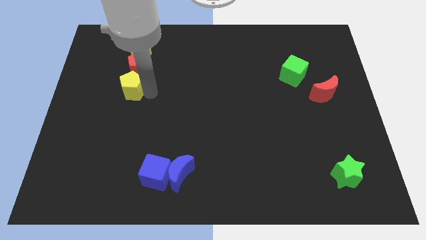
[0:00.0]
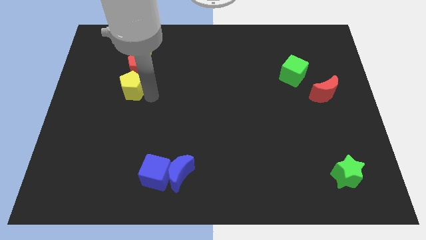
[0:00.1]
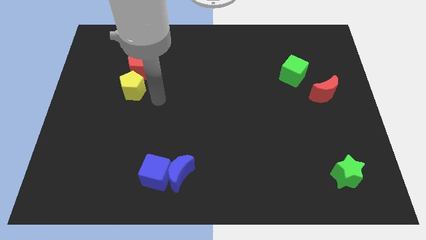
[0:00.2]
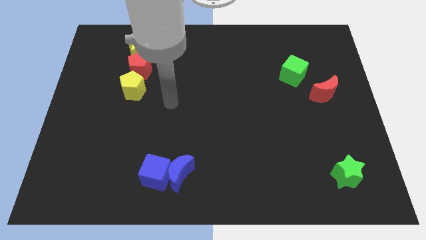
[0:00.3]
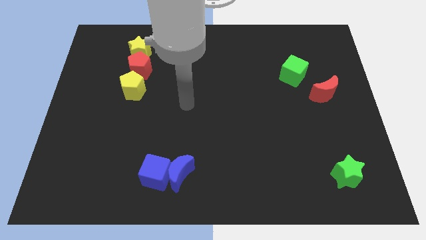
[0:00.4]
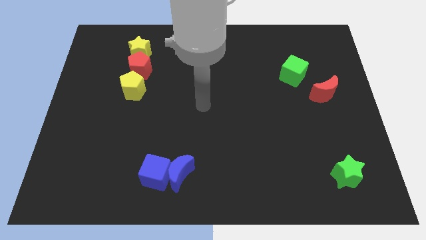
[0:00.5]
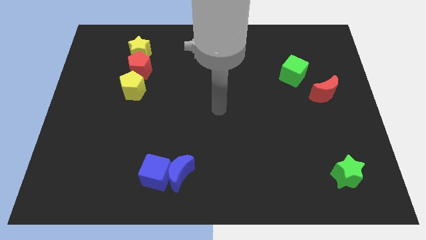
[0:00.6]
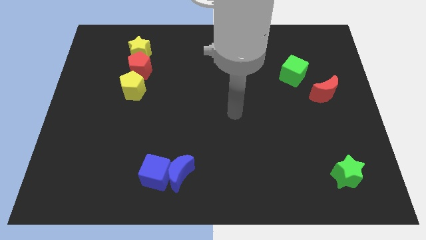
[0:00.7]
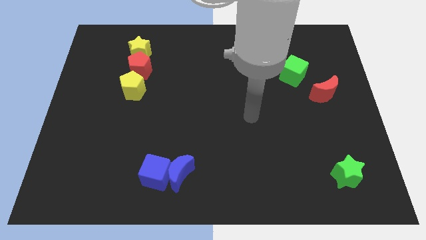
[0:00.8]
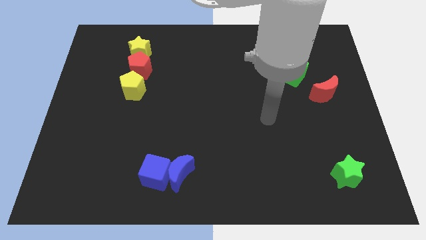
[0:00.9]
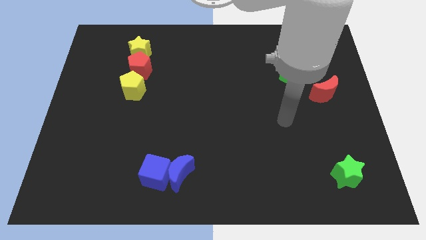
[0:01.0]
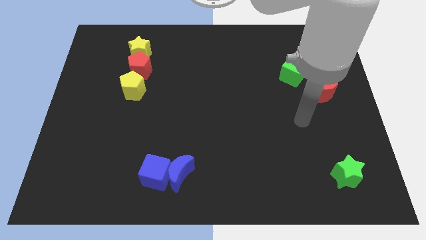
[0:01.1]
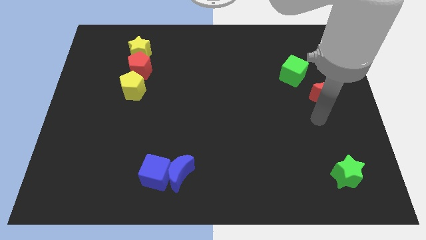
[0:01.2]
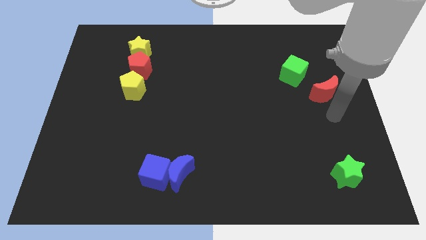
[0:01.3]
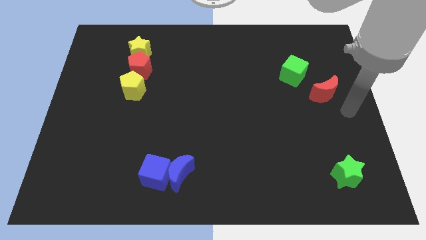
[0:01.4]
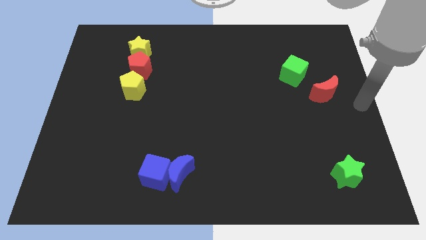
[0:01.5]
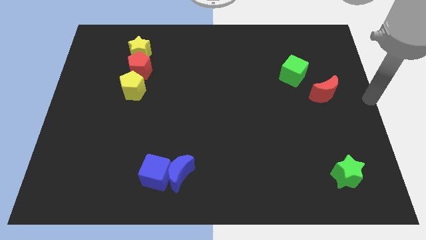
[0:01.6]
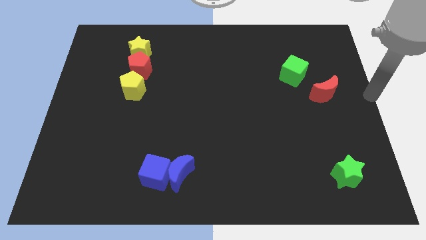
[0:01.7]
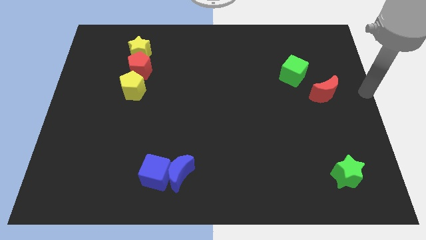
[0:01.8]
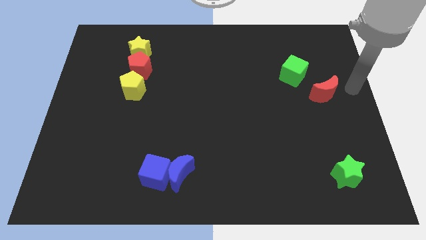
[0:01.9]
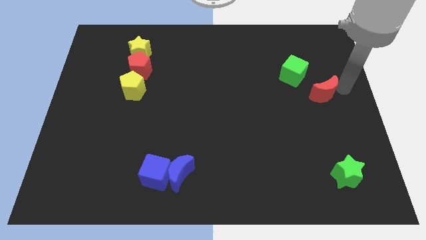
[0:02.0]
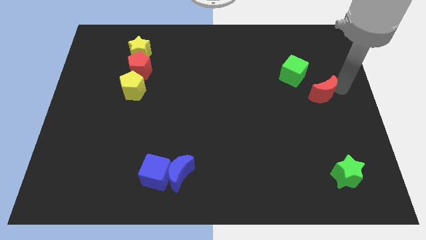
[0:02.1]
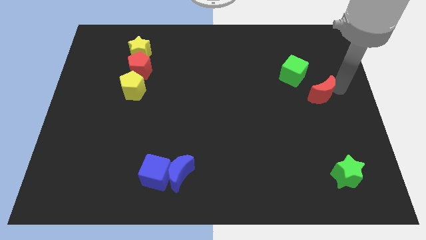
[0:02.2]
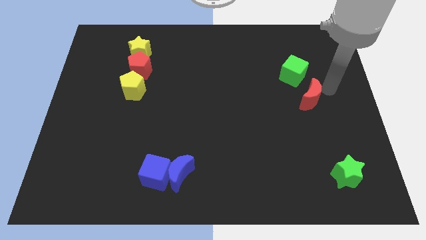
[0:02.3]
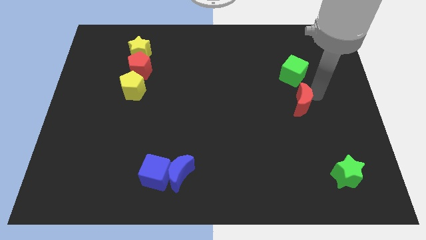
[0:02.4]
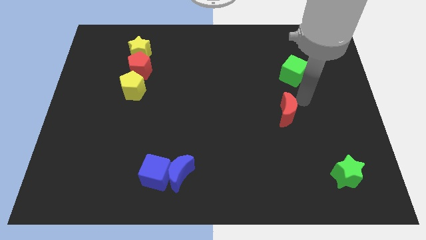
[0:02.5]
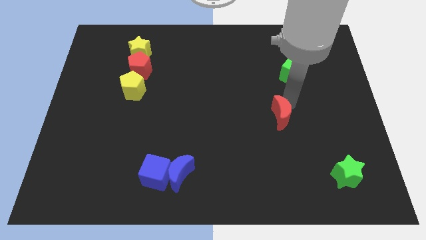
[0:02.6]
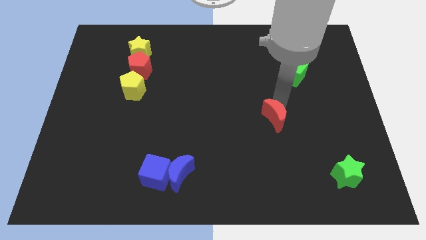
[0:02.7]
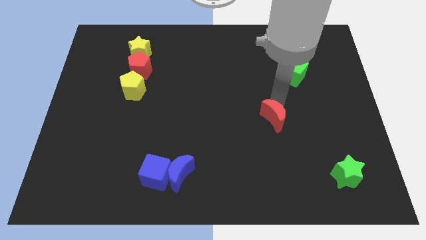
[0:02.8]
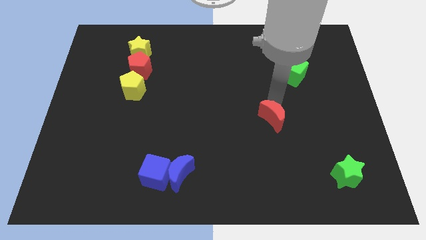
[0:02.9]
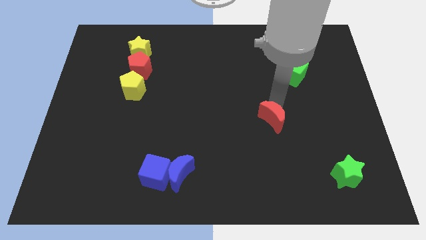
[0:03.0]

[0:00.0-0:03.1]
move away red moon from green cube

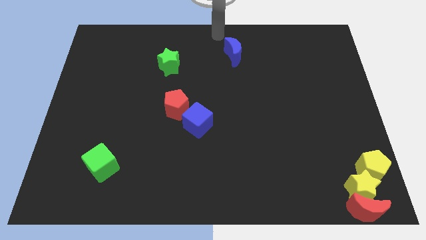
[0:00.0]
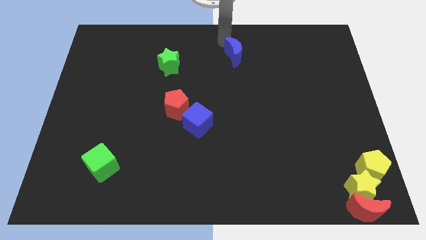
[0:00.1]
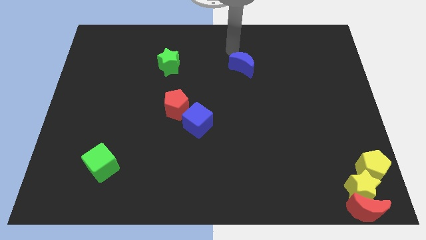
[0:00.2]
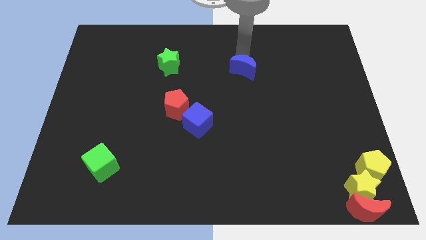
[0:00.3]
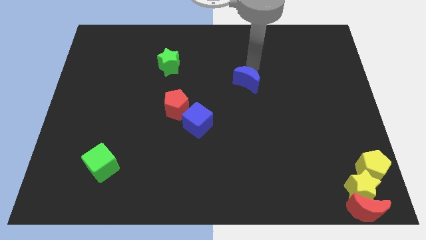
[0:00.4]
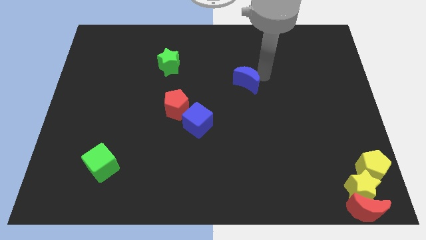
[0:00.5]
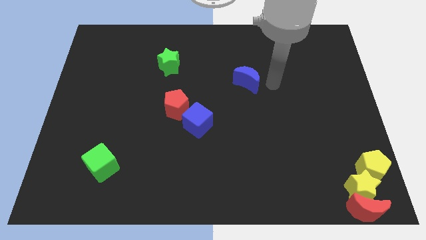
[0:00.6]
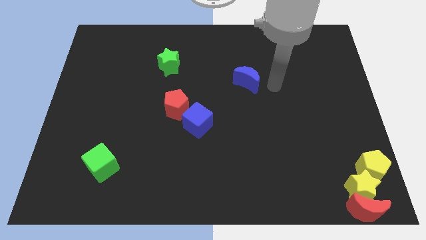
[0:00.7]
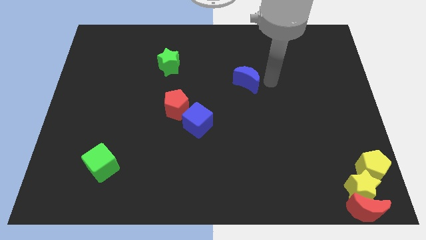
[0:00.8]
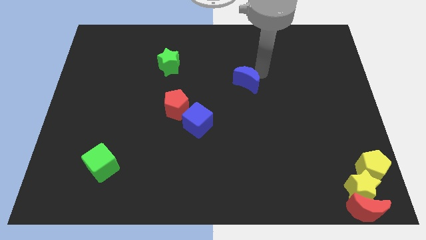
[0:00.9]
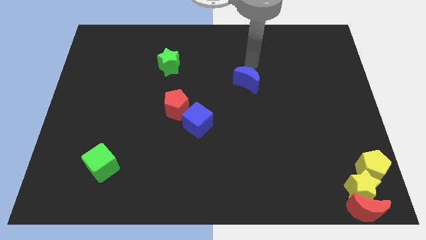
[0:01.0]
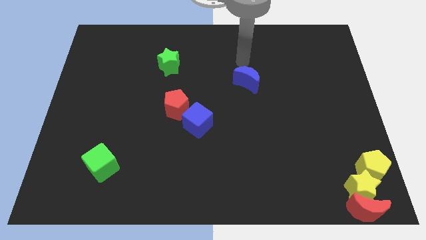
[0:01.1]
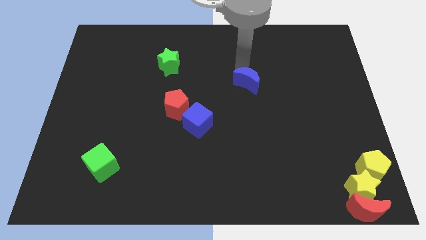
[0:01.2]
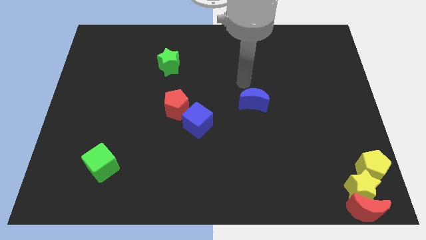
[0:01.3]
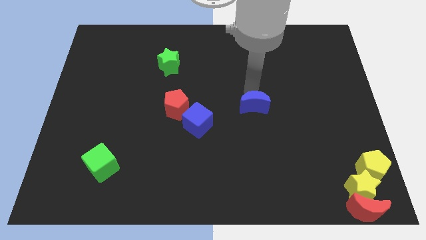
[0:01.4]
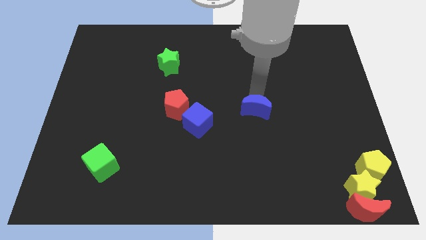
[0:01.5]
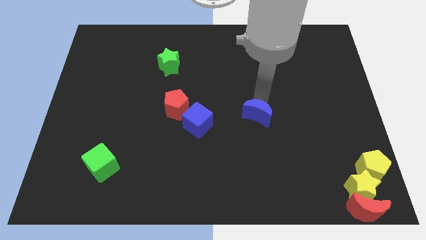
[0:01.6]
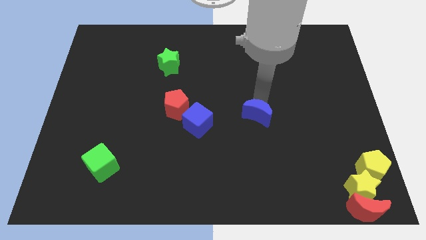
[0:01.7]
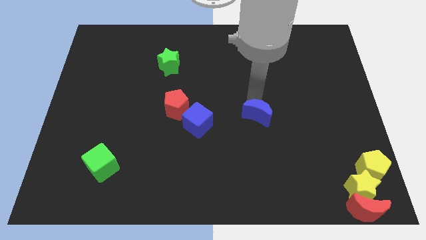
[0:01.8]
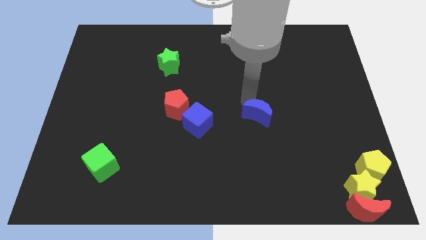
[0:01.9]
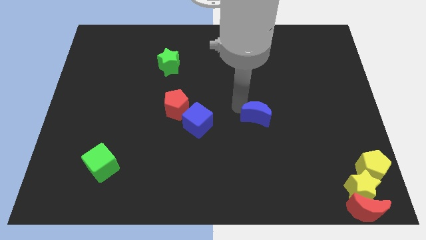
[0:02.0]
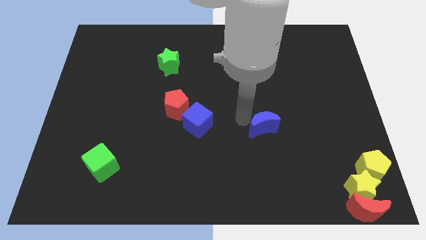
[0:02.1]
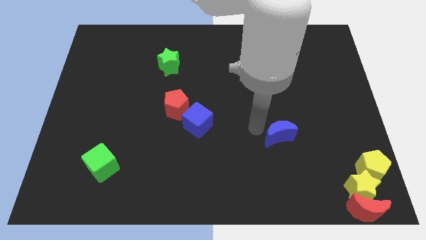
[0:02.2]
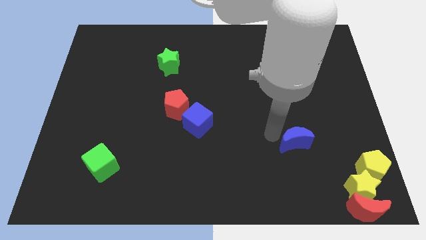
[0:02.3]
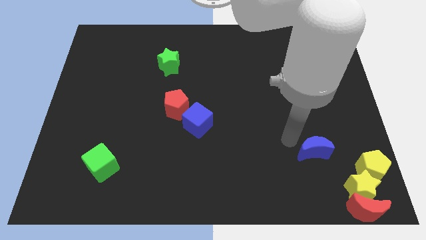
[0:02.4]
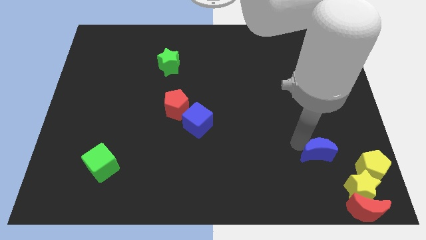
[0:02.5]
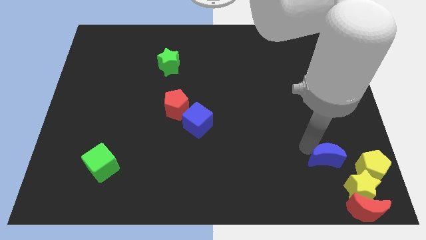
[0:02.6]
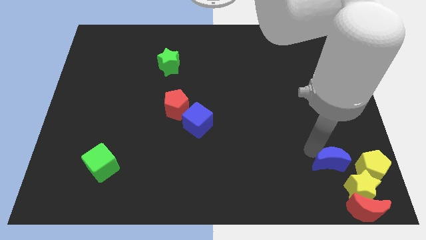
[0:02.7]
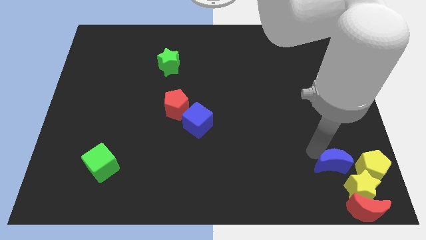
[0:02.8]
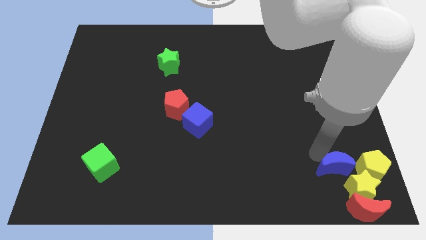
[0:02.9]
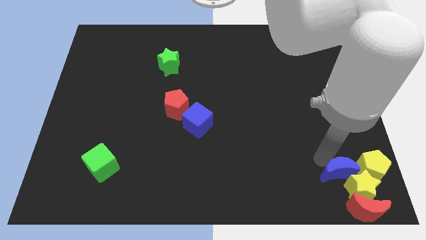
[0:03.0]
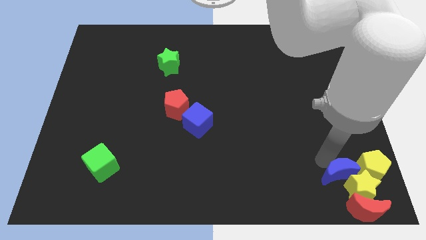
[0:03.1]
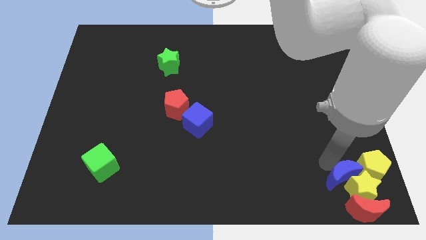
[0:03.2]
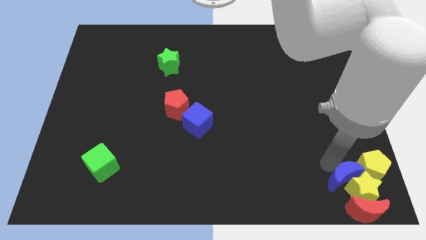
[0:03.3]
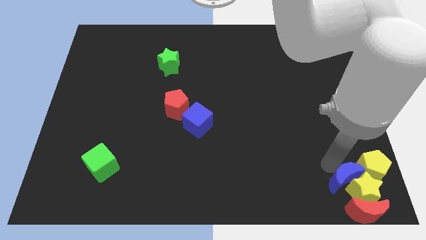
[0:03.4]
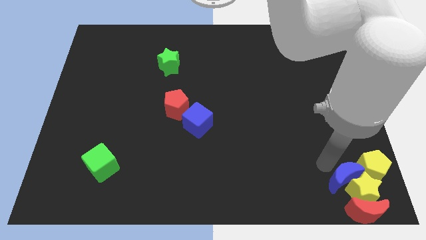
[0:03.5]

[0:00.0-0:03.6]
push the blue crescent to the top left of the yellow star

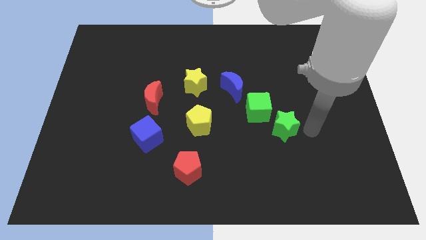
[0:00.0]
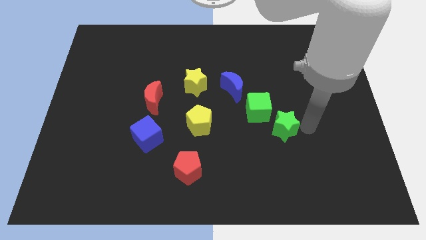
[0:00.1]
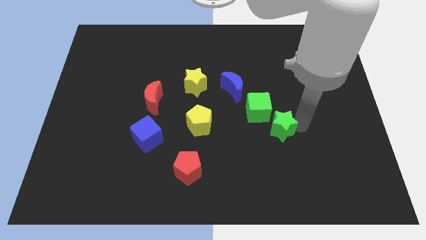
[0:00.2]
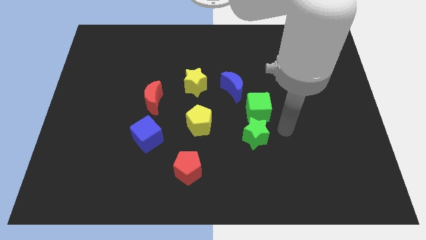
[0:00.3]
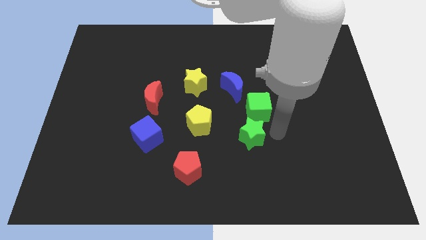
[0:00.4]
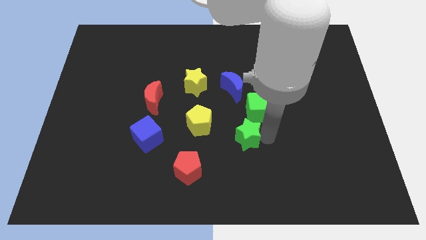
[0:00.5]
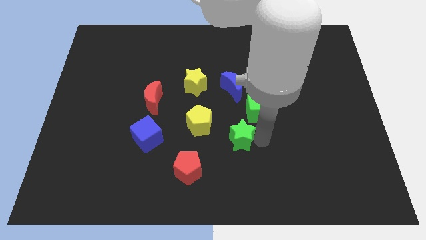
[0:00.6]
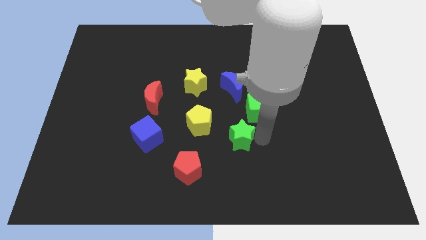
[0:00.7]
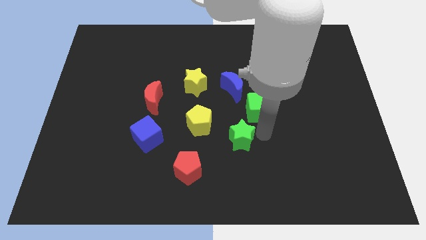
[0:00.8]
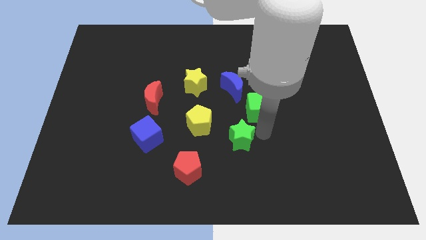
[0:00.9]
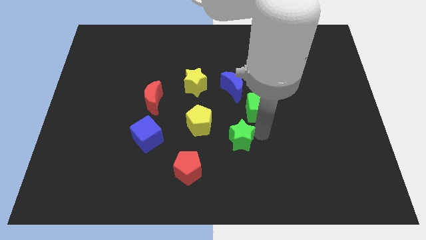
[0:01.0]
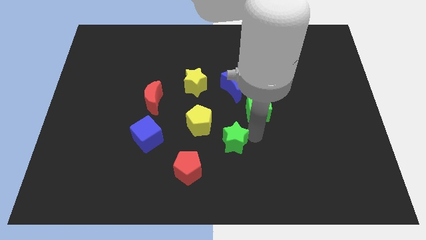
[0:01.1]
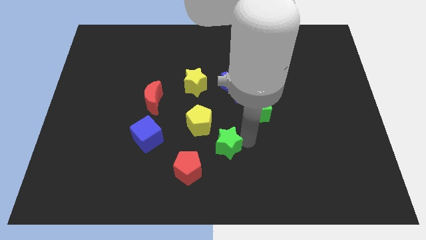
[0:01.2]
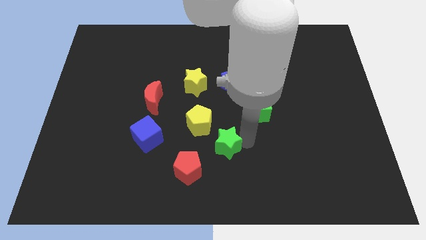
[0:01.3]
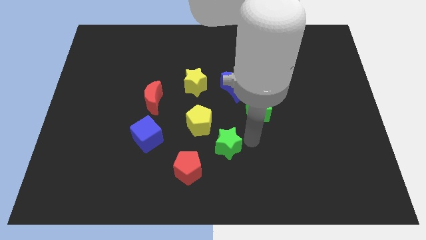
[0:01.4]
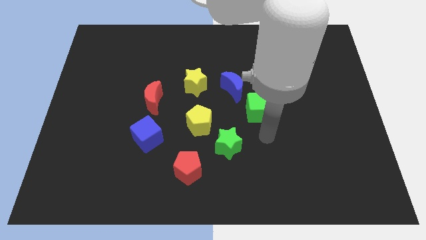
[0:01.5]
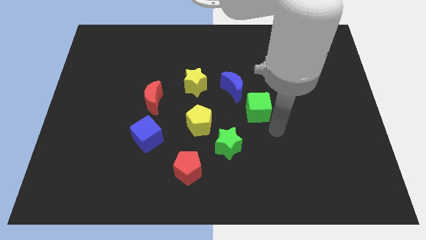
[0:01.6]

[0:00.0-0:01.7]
push the green star closer to the red pentagon

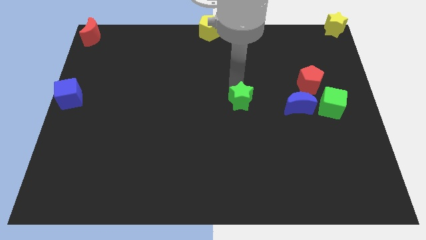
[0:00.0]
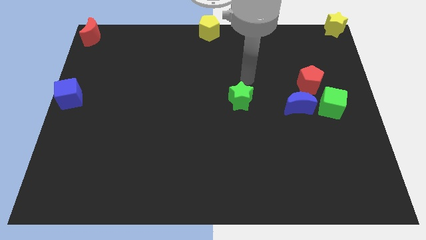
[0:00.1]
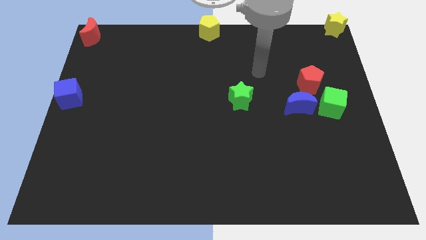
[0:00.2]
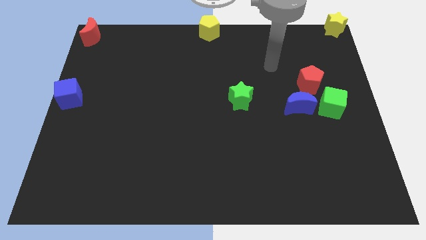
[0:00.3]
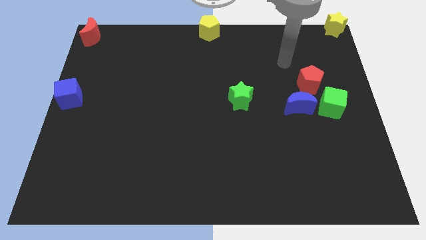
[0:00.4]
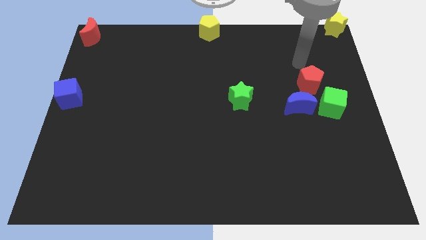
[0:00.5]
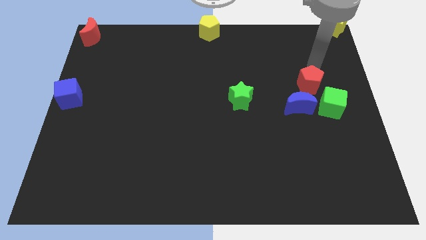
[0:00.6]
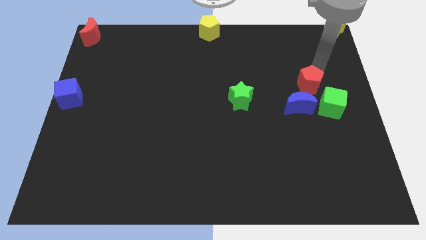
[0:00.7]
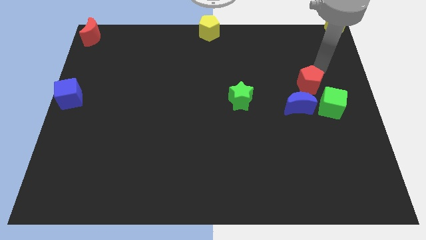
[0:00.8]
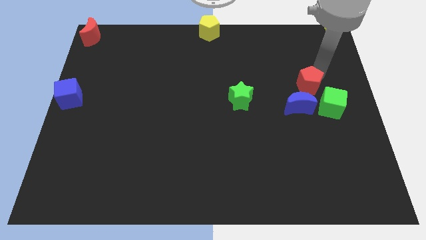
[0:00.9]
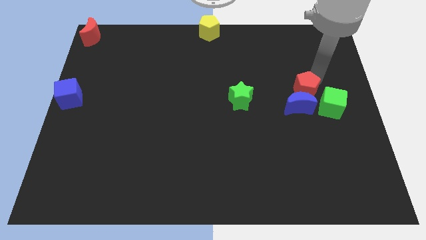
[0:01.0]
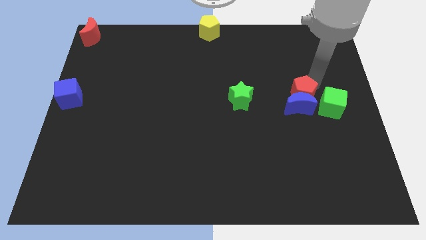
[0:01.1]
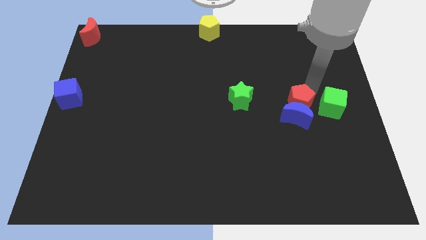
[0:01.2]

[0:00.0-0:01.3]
move the red pentagon into the top side of the blue crescent
